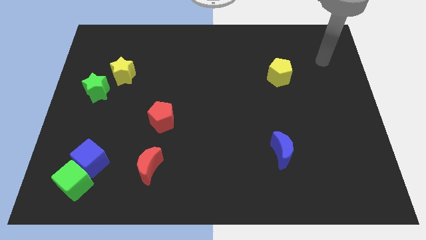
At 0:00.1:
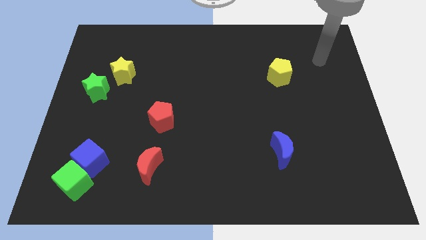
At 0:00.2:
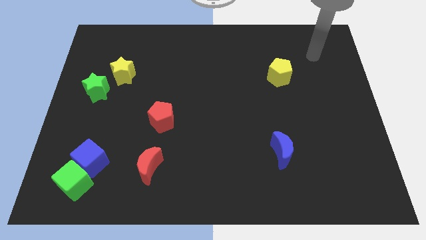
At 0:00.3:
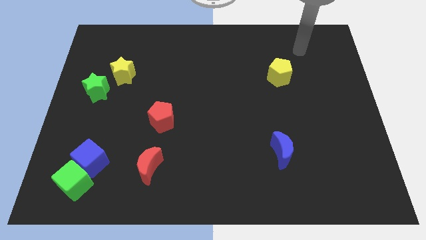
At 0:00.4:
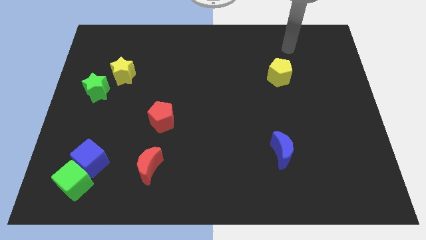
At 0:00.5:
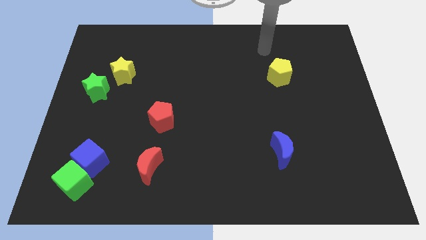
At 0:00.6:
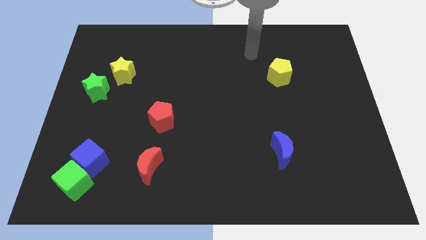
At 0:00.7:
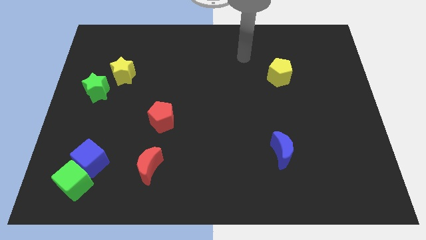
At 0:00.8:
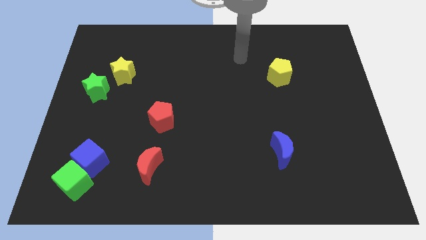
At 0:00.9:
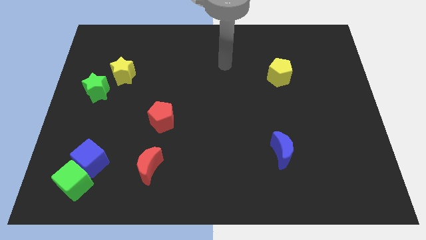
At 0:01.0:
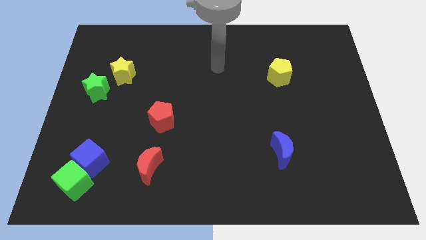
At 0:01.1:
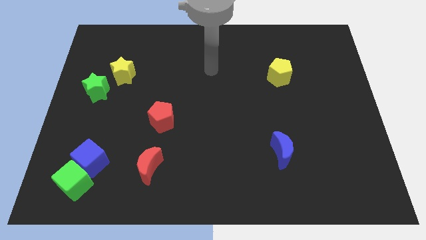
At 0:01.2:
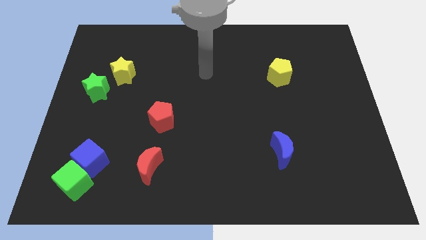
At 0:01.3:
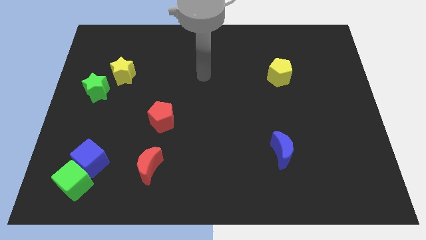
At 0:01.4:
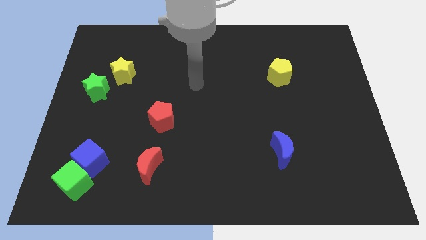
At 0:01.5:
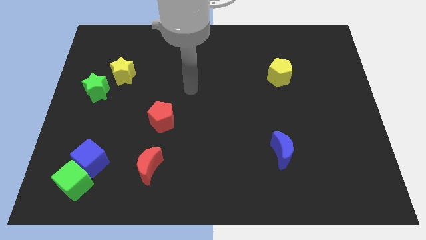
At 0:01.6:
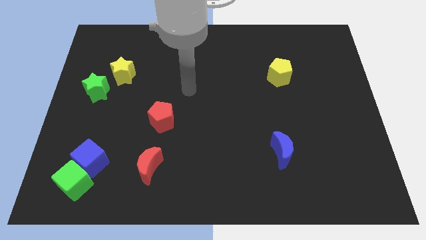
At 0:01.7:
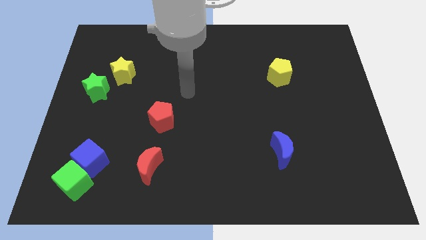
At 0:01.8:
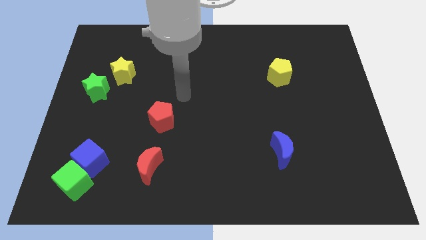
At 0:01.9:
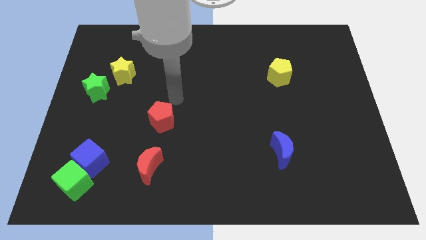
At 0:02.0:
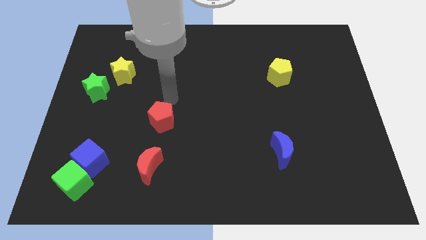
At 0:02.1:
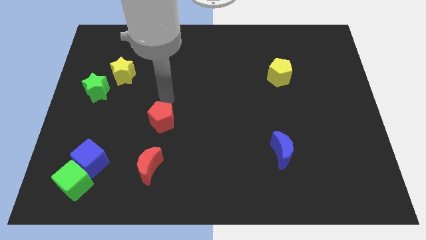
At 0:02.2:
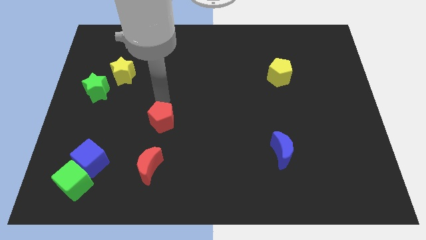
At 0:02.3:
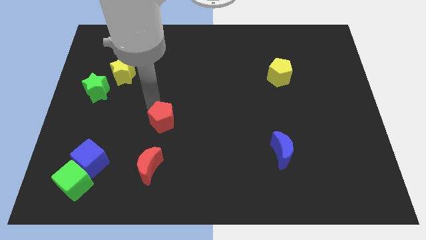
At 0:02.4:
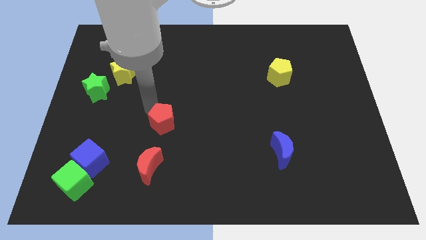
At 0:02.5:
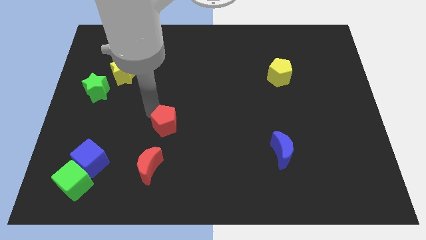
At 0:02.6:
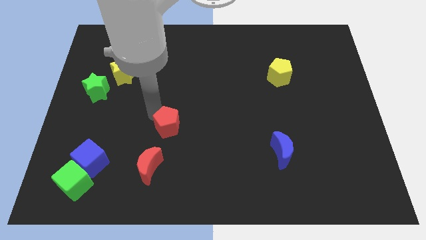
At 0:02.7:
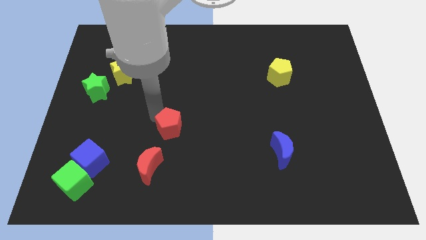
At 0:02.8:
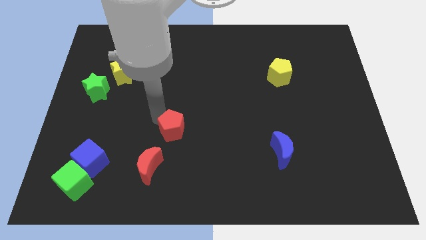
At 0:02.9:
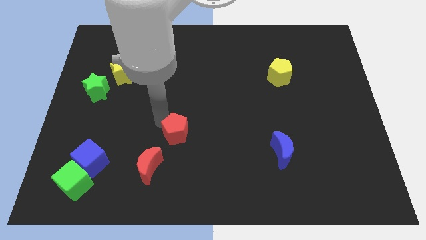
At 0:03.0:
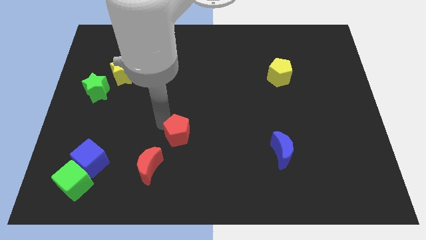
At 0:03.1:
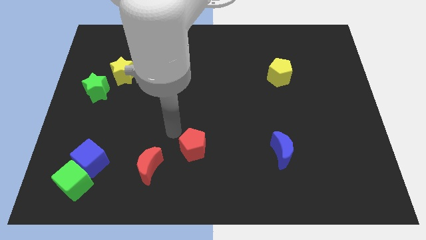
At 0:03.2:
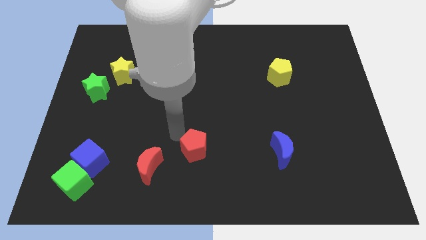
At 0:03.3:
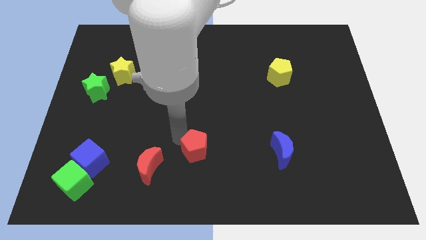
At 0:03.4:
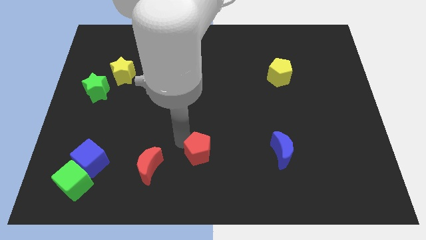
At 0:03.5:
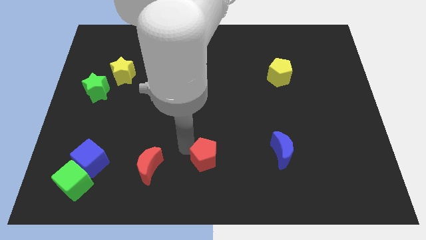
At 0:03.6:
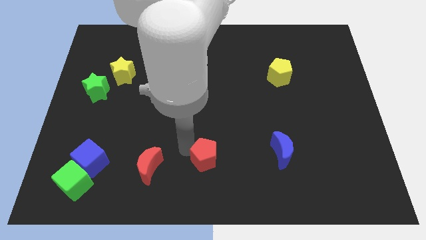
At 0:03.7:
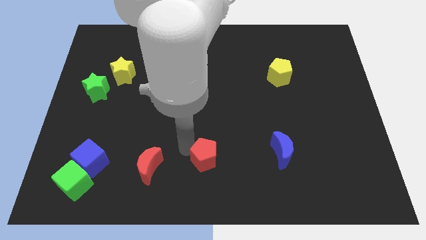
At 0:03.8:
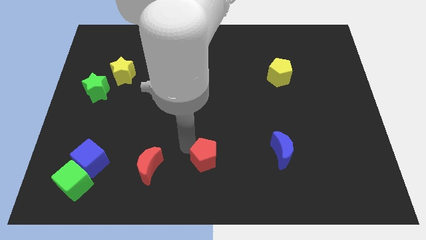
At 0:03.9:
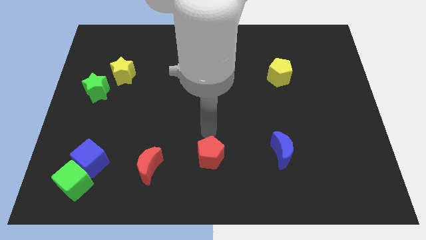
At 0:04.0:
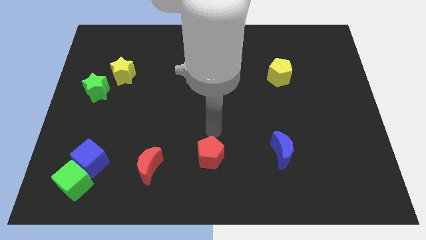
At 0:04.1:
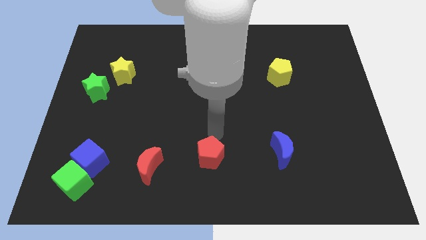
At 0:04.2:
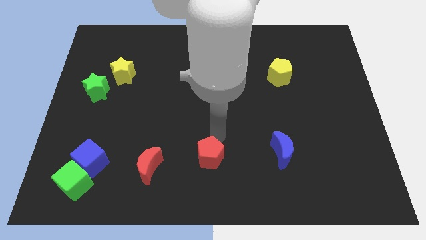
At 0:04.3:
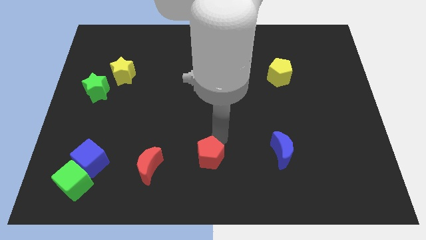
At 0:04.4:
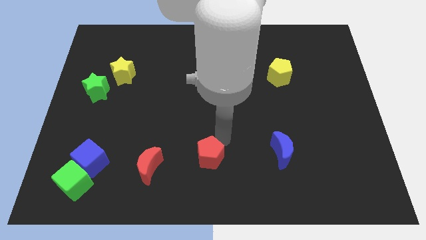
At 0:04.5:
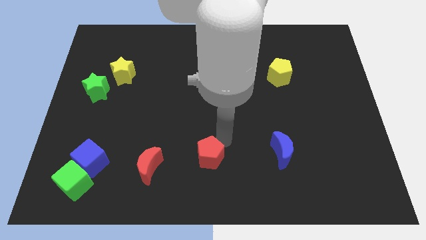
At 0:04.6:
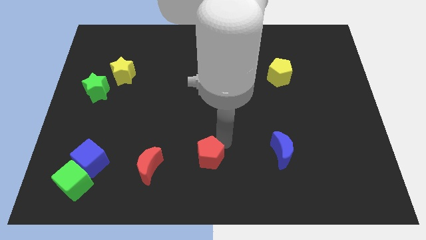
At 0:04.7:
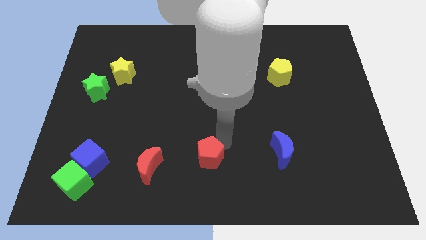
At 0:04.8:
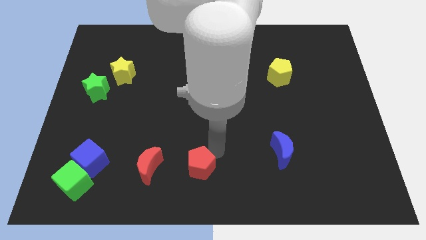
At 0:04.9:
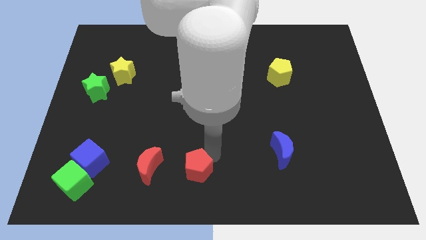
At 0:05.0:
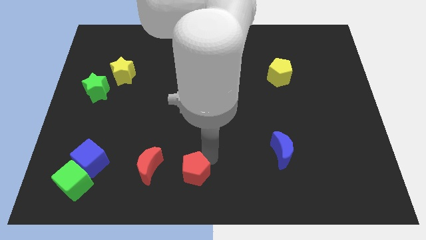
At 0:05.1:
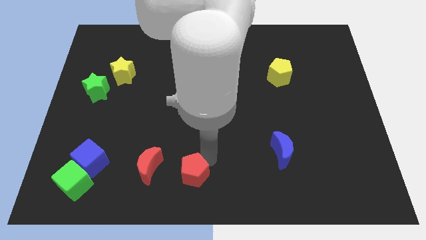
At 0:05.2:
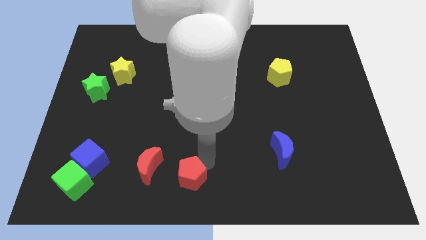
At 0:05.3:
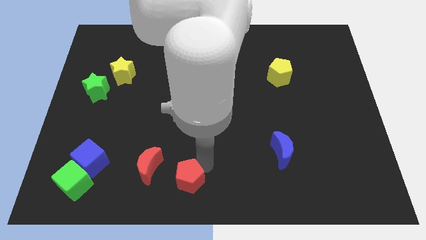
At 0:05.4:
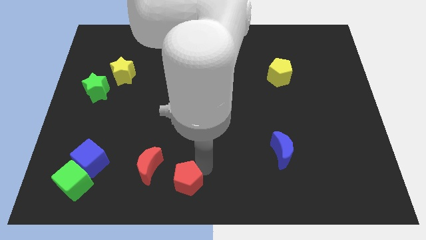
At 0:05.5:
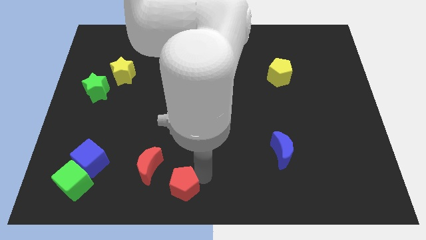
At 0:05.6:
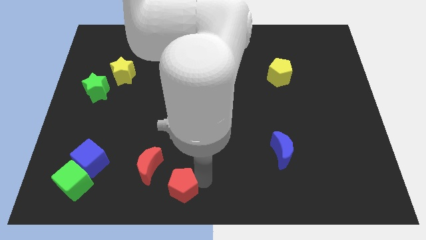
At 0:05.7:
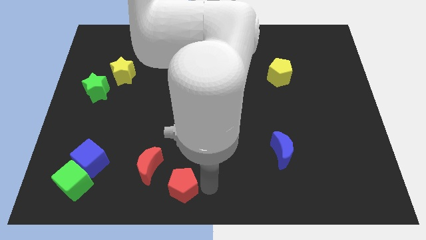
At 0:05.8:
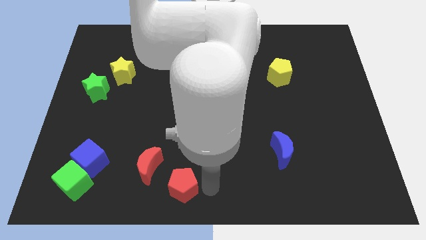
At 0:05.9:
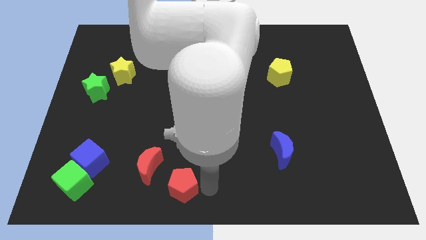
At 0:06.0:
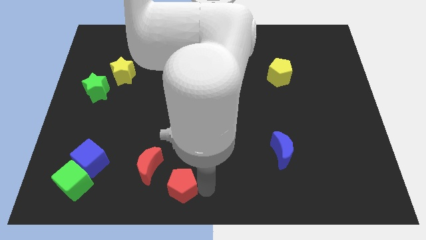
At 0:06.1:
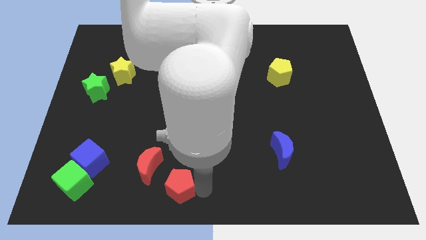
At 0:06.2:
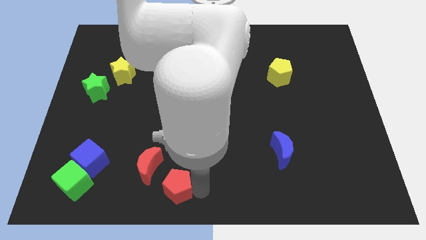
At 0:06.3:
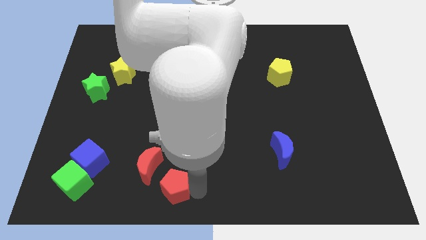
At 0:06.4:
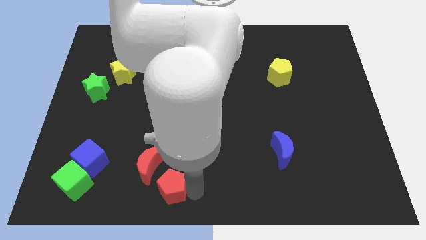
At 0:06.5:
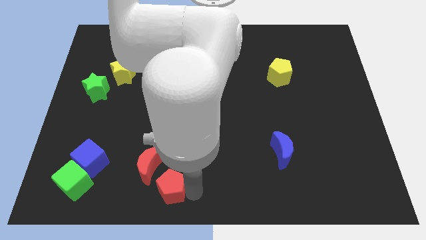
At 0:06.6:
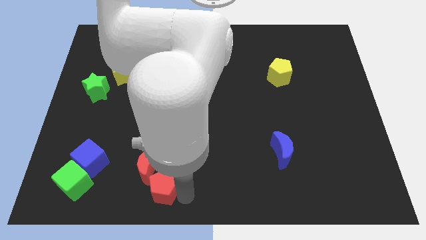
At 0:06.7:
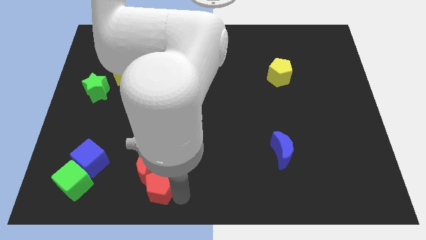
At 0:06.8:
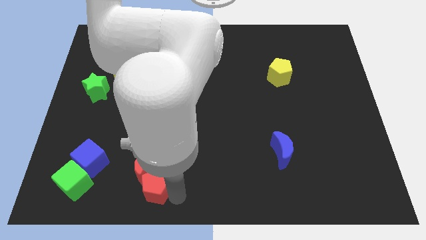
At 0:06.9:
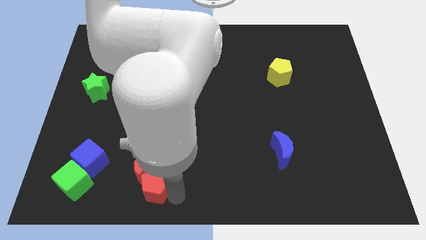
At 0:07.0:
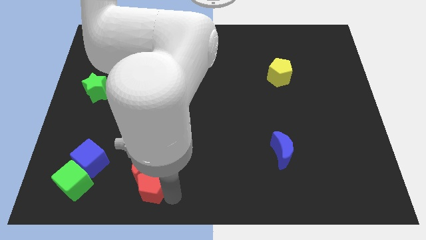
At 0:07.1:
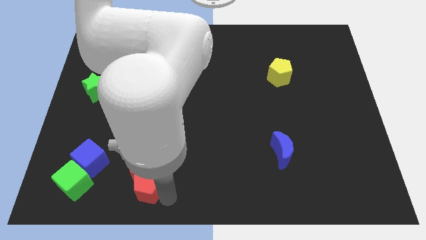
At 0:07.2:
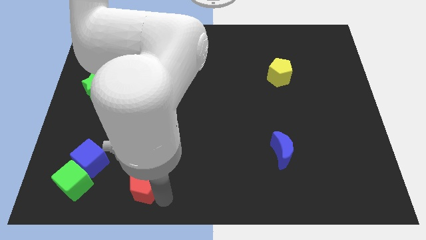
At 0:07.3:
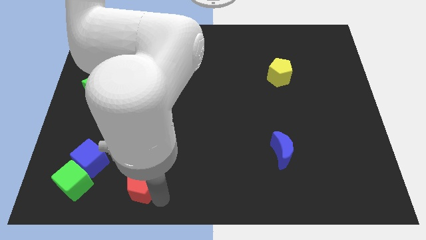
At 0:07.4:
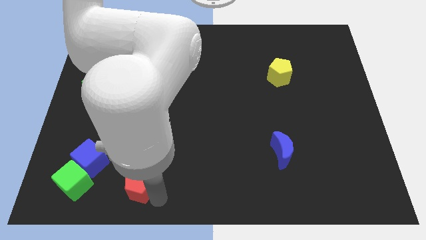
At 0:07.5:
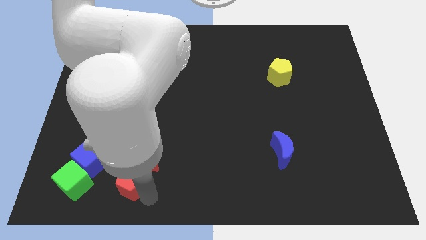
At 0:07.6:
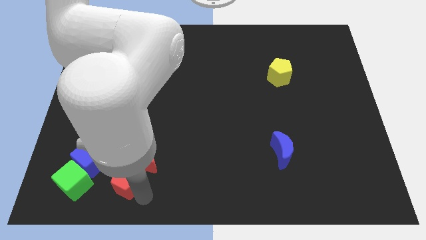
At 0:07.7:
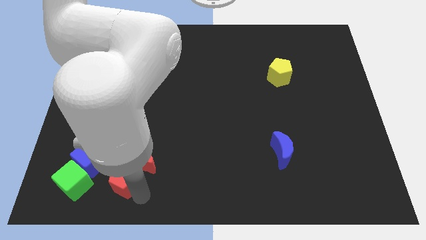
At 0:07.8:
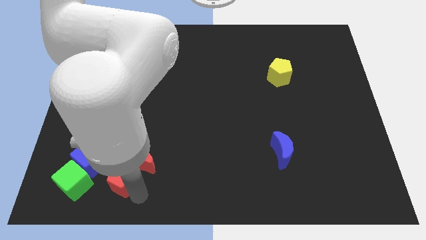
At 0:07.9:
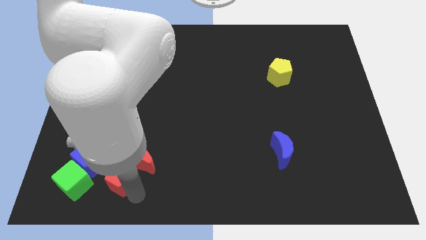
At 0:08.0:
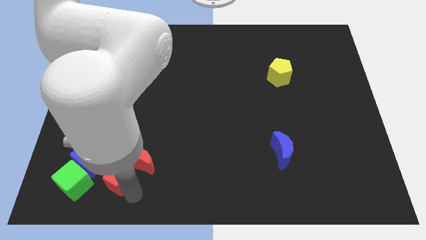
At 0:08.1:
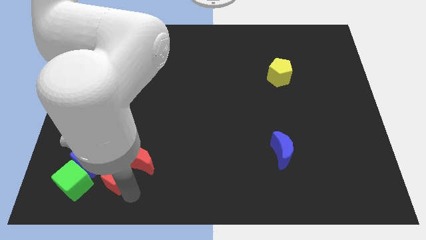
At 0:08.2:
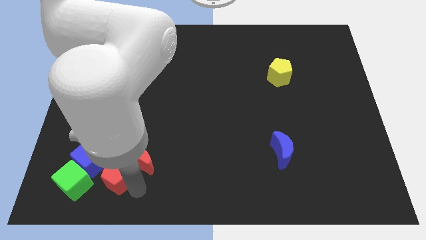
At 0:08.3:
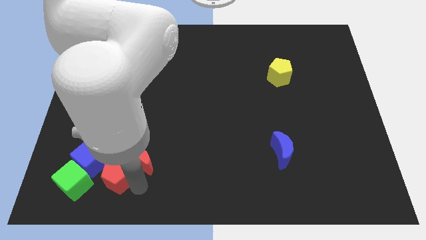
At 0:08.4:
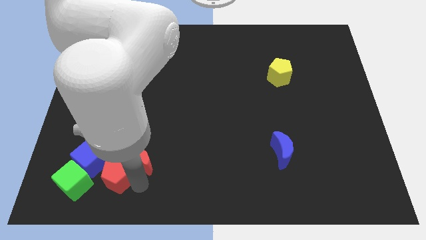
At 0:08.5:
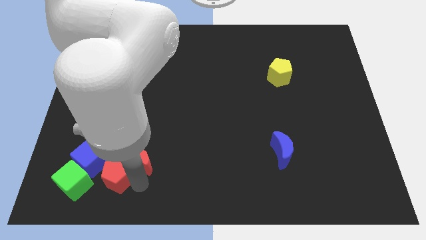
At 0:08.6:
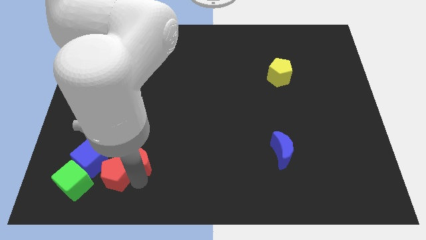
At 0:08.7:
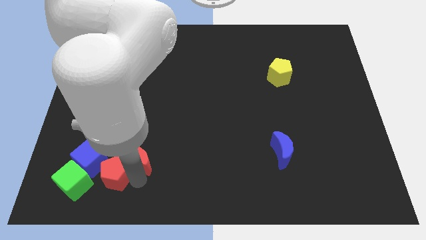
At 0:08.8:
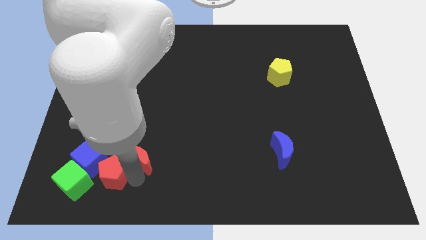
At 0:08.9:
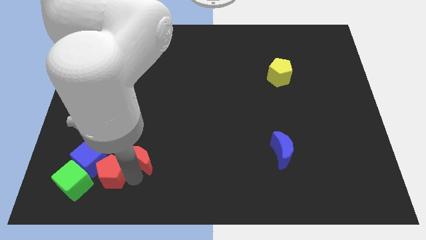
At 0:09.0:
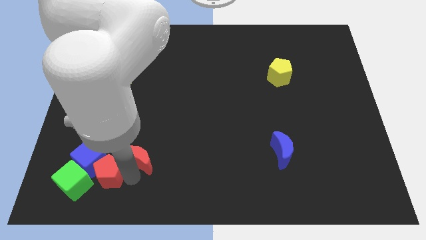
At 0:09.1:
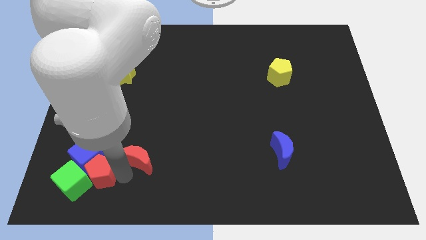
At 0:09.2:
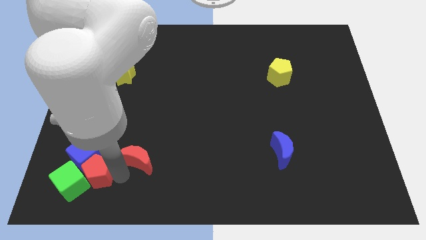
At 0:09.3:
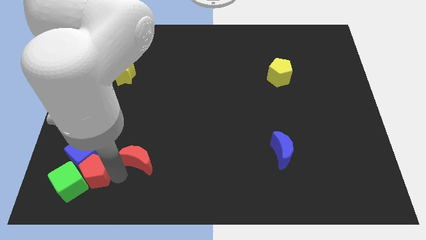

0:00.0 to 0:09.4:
put the red pentagon close to the green cube
